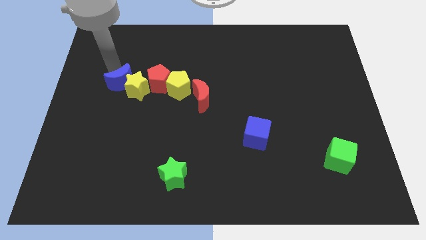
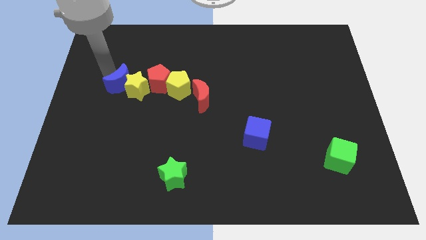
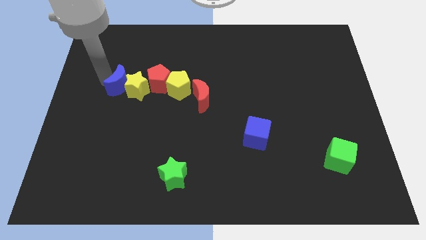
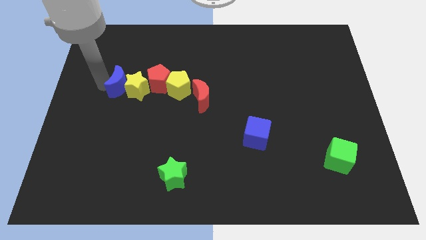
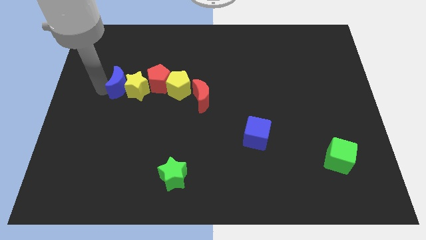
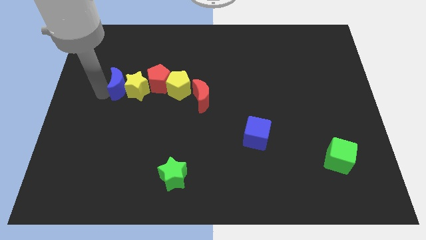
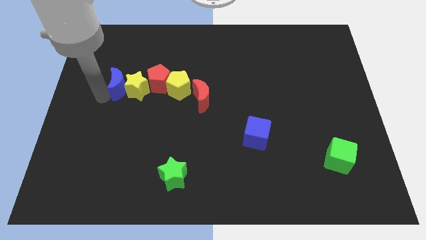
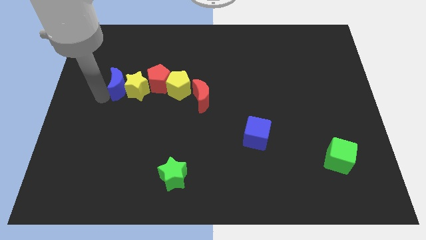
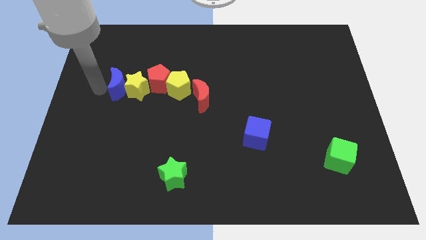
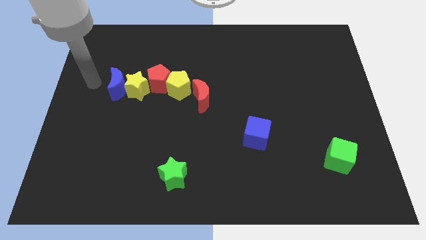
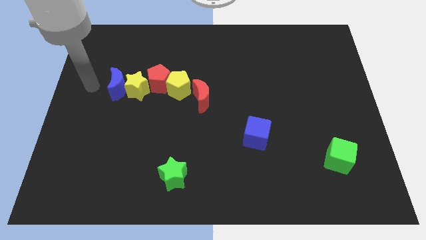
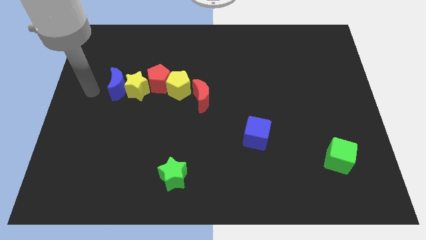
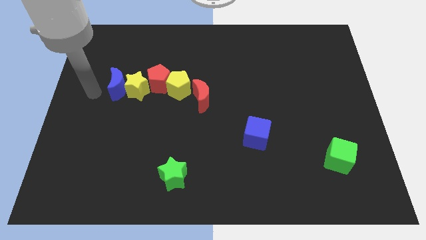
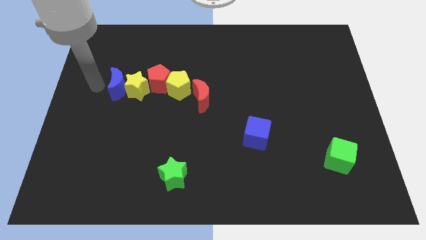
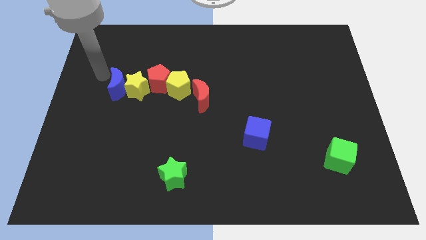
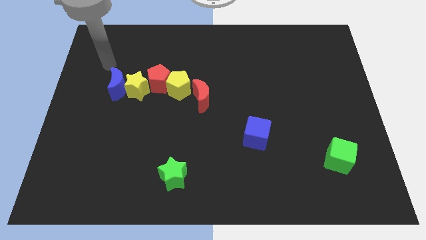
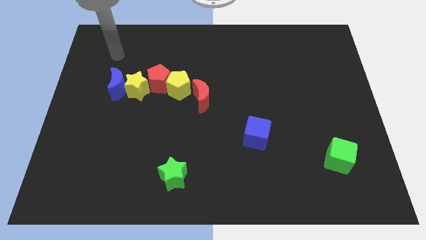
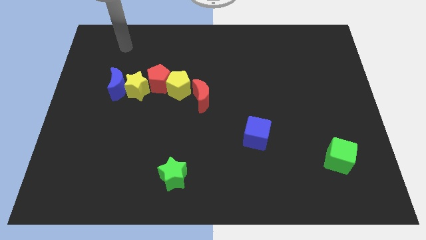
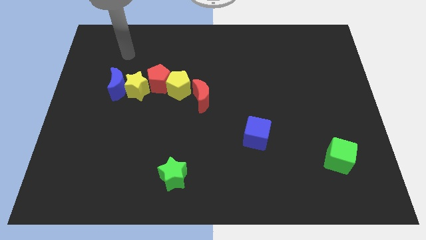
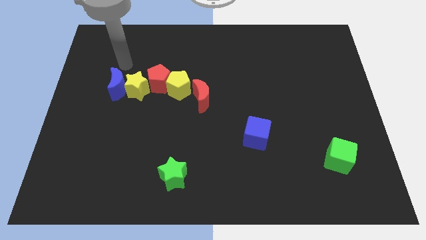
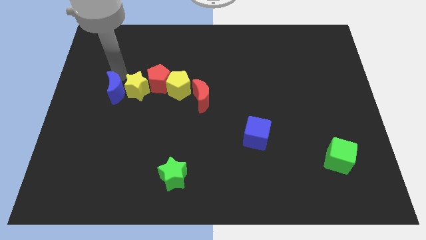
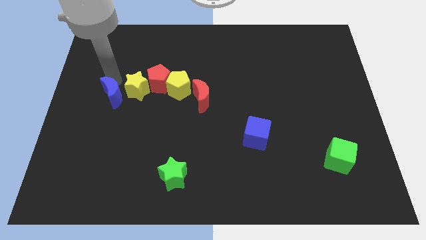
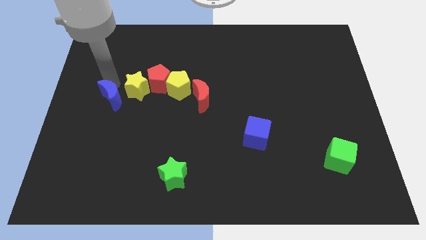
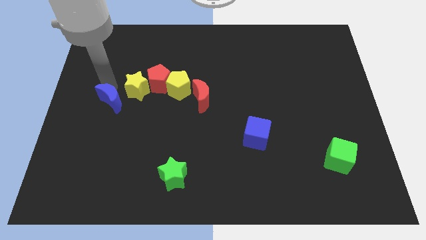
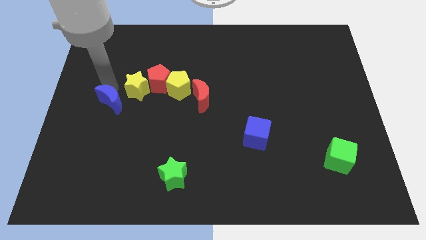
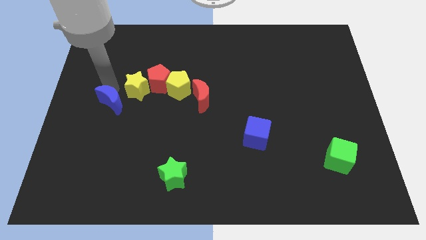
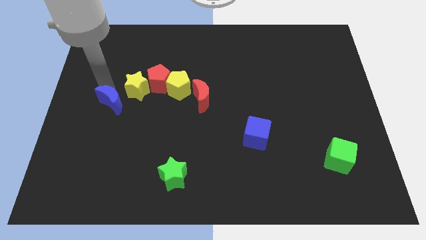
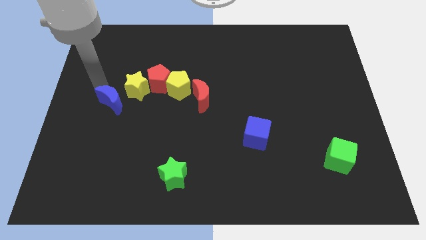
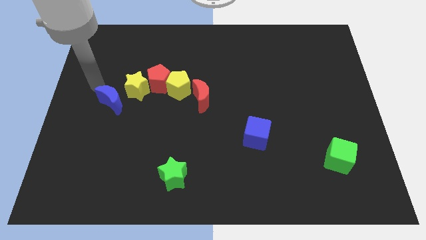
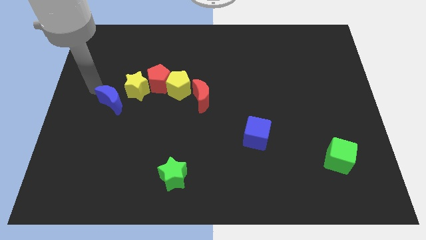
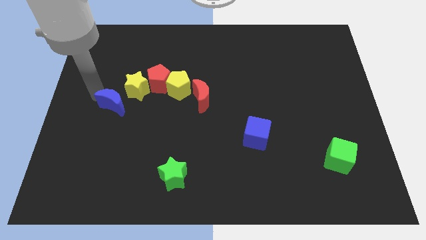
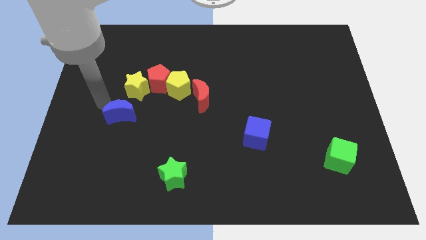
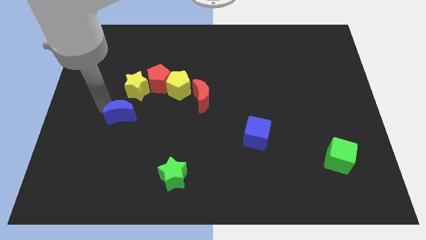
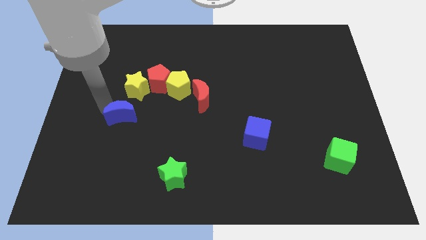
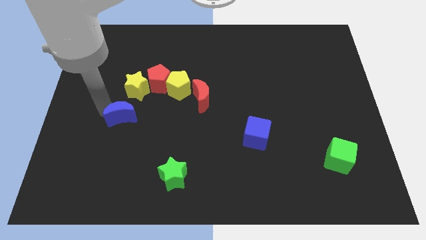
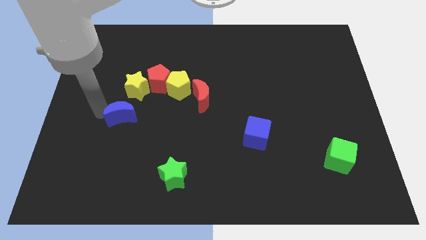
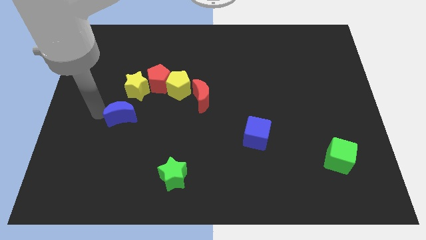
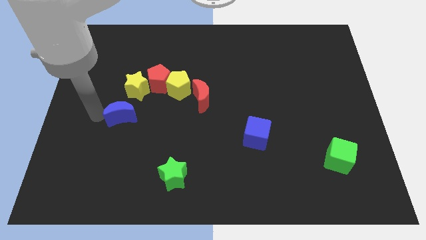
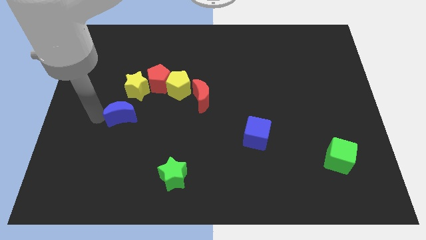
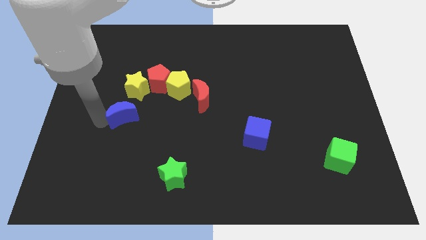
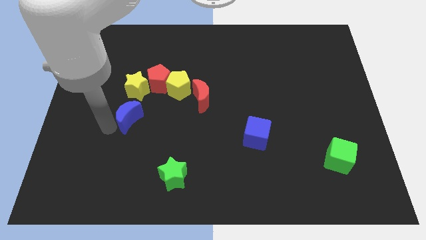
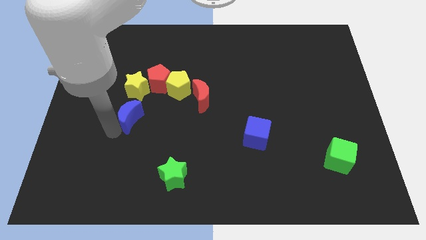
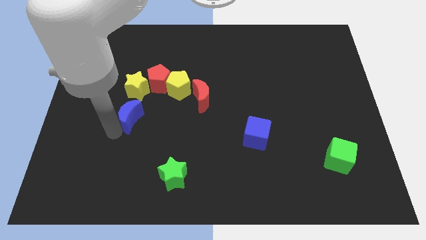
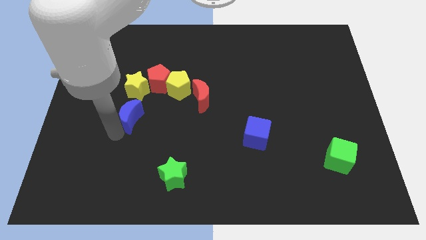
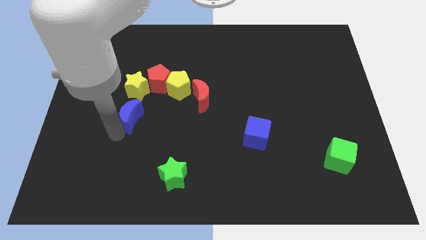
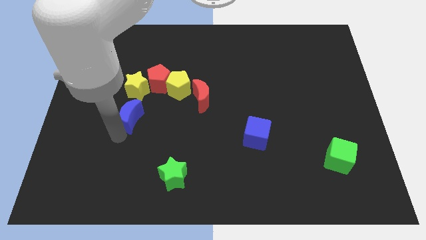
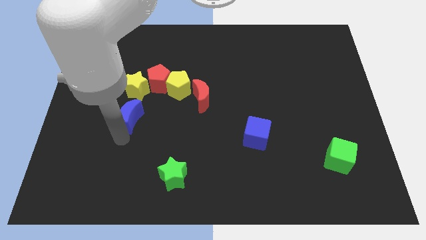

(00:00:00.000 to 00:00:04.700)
place the blue moon below the yellow star

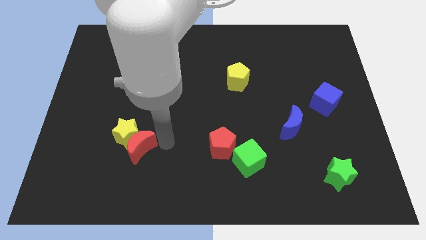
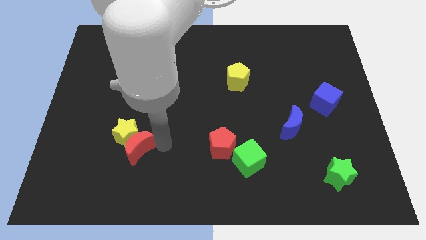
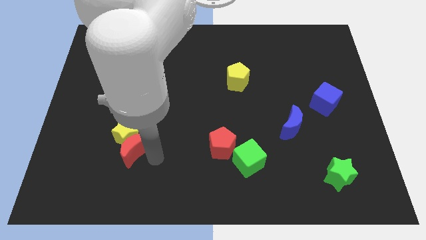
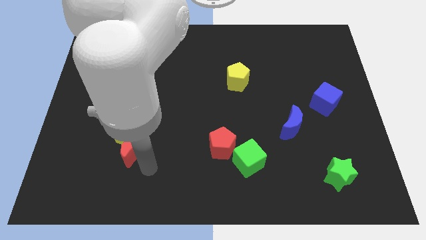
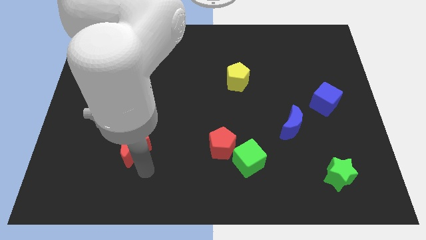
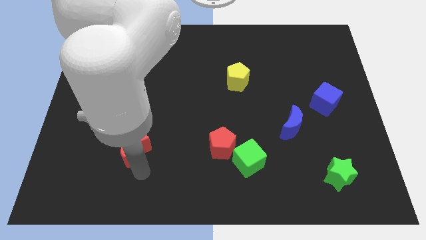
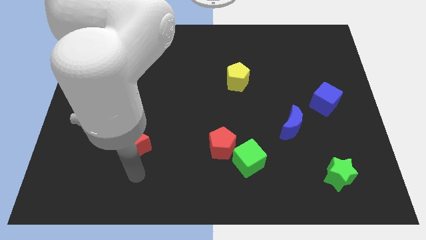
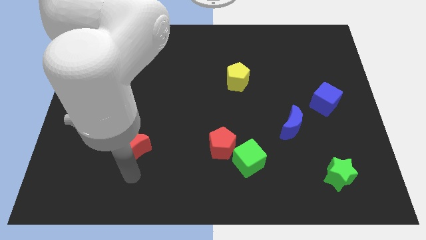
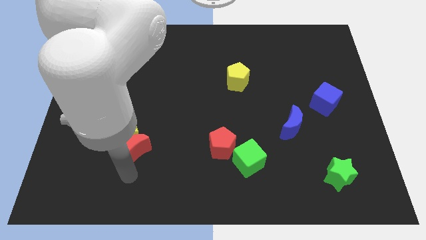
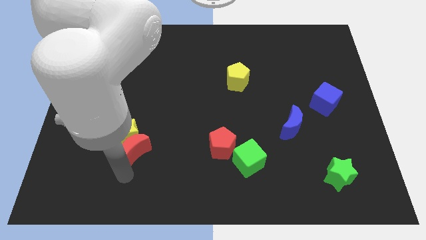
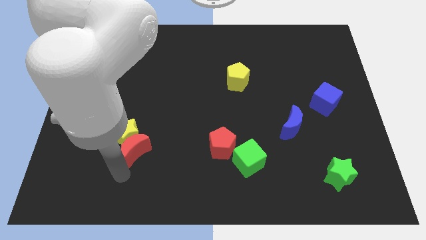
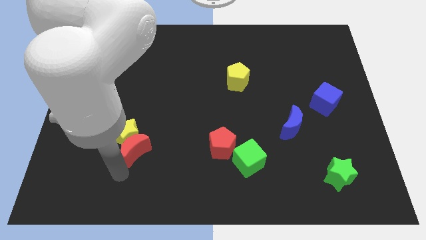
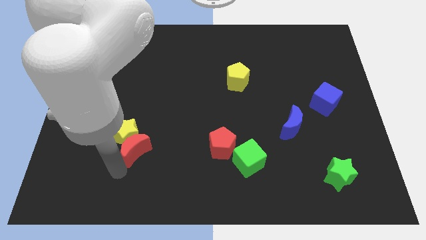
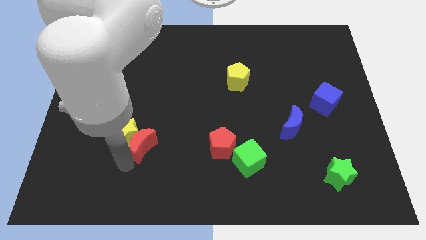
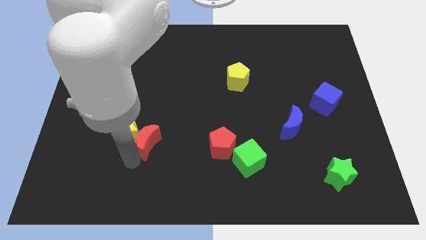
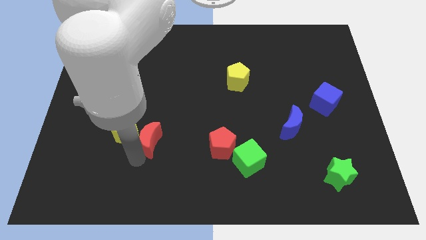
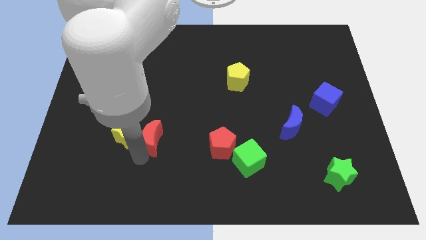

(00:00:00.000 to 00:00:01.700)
place red moon to the right of yellow star

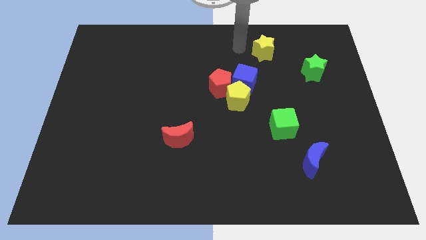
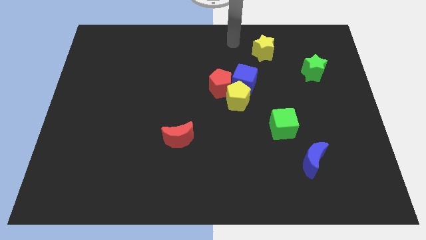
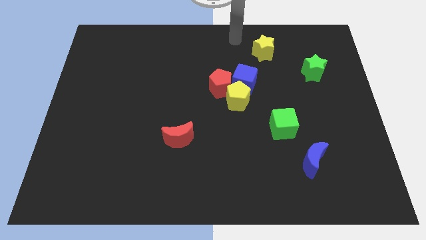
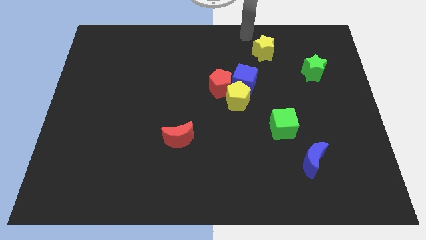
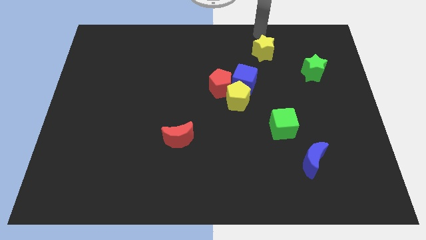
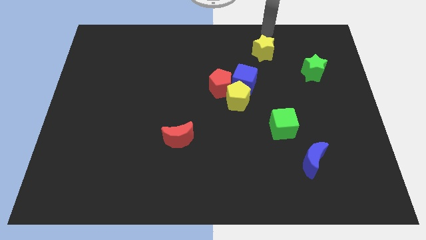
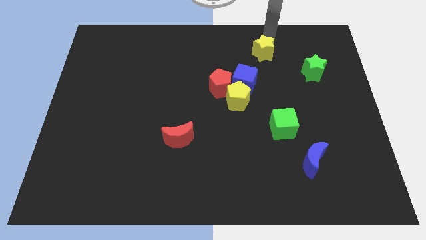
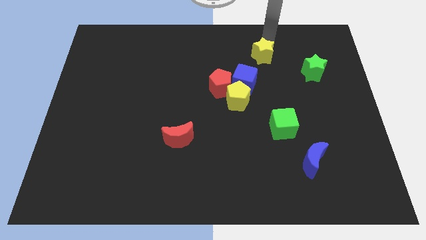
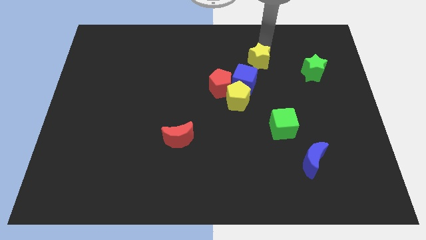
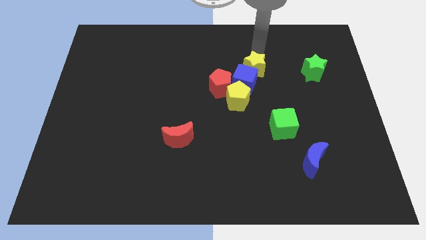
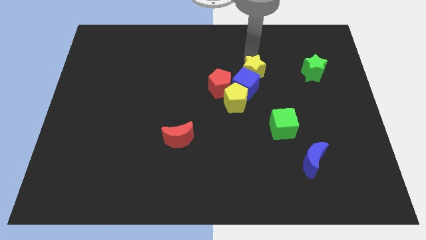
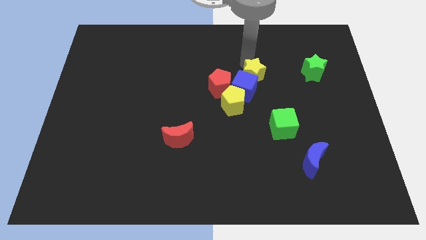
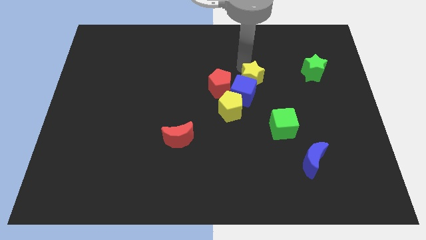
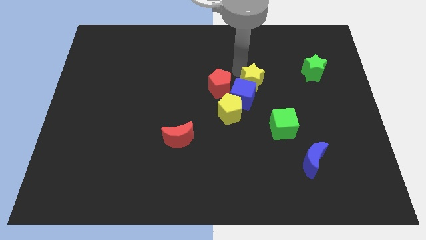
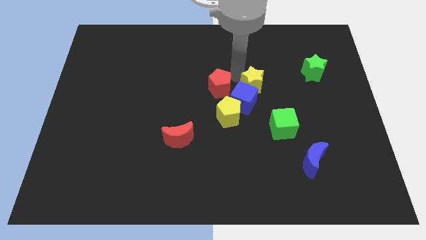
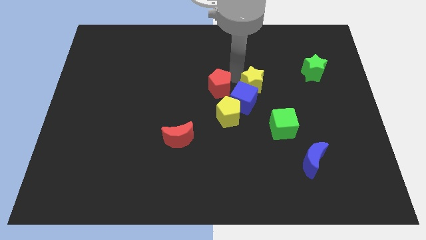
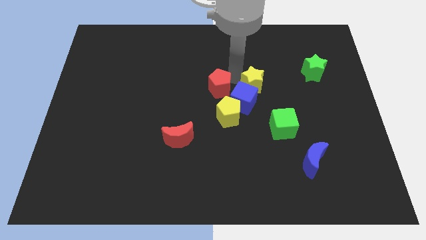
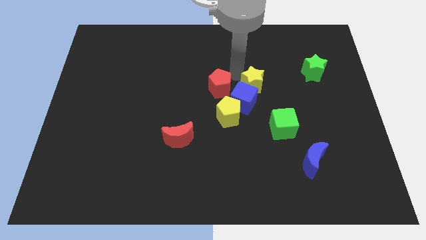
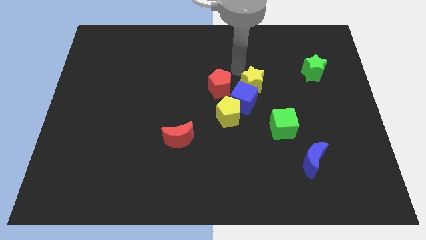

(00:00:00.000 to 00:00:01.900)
push the yellow star into the blue cube

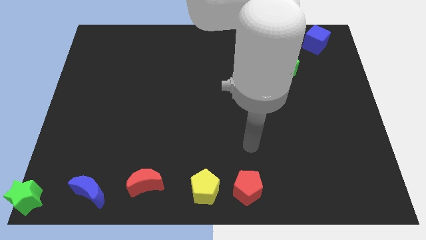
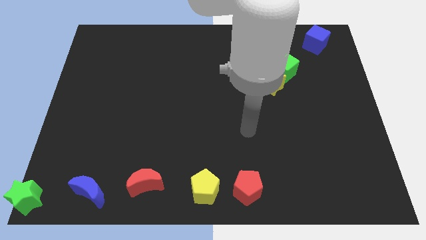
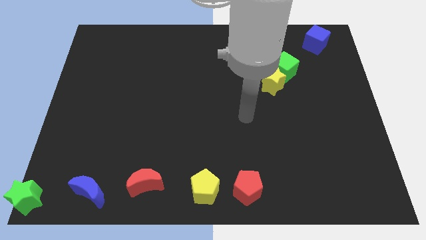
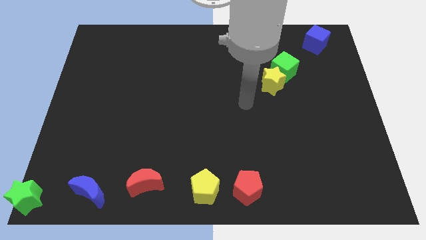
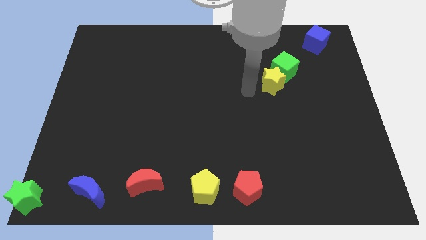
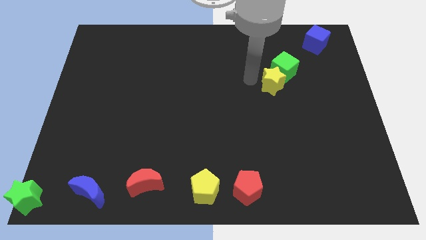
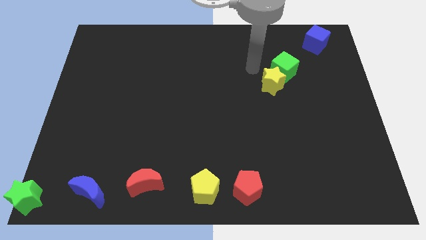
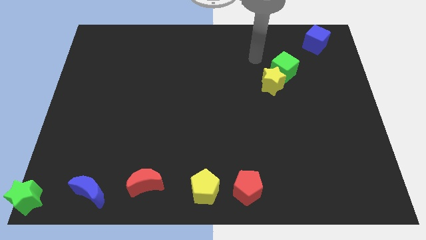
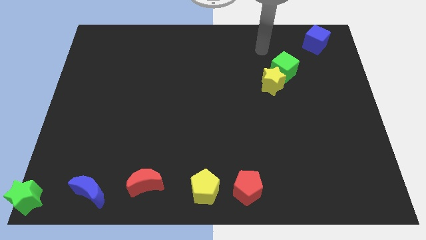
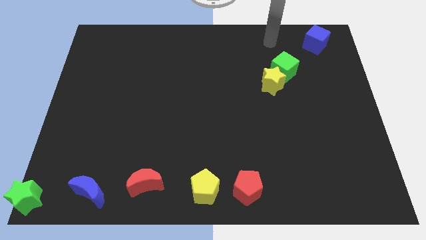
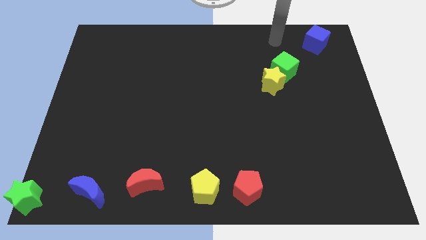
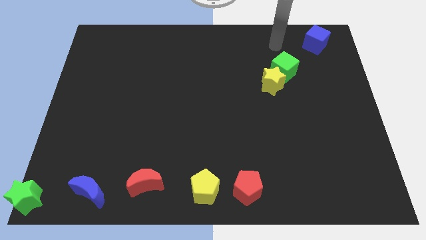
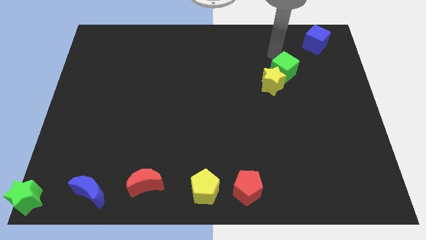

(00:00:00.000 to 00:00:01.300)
place the arm near the green cube
